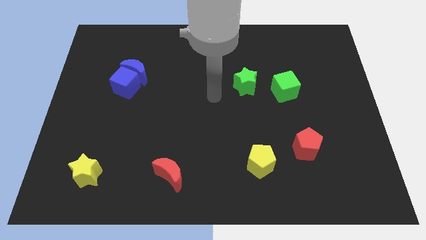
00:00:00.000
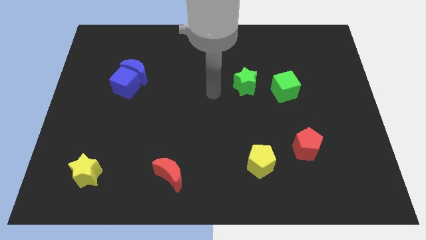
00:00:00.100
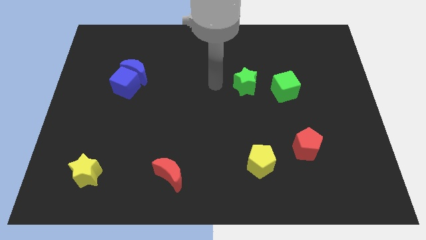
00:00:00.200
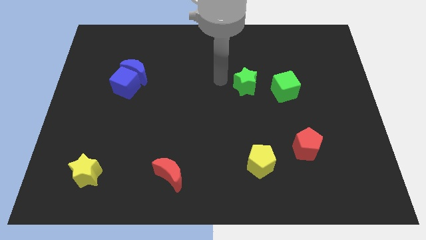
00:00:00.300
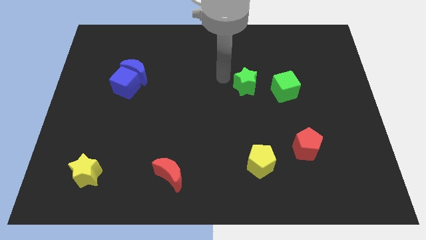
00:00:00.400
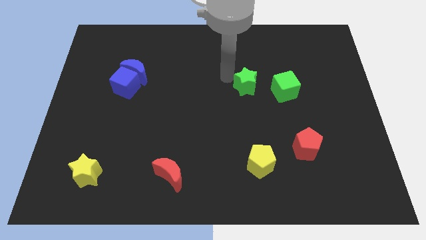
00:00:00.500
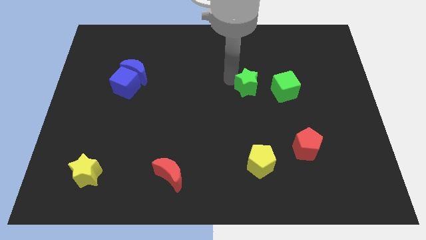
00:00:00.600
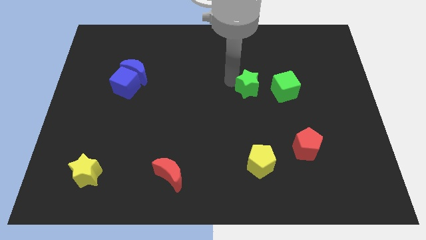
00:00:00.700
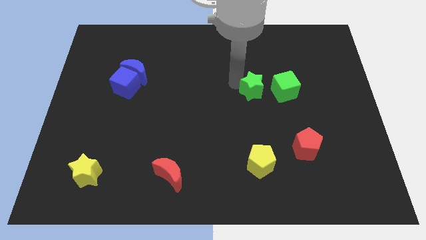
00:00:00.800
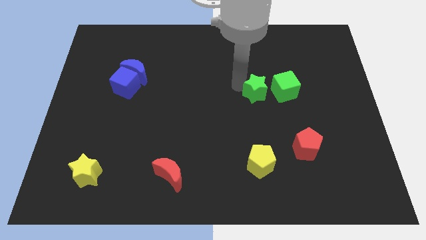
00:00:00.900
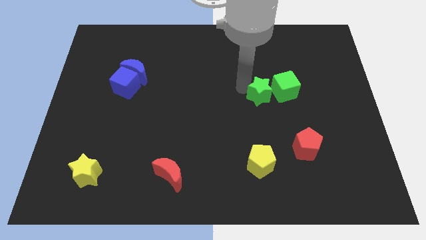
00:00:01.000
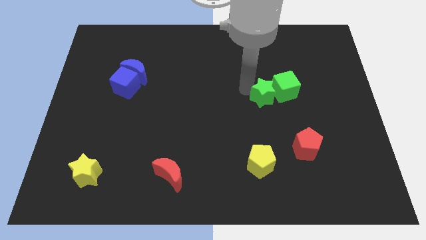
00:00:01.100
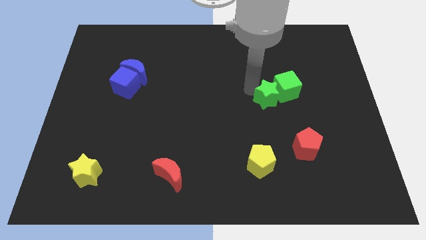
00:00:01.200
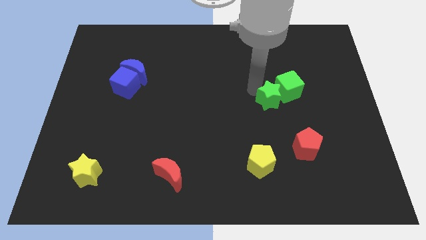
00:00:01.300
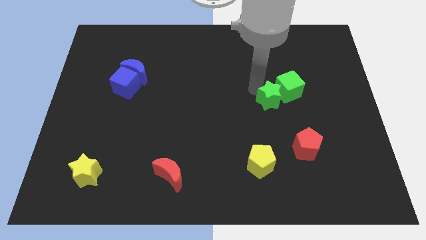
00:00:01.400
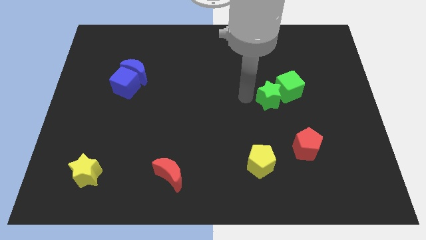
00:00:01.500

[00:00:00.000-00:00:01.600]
push the green star into the green cube

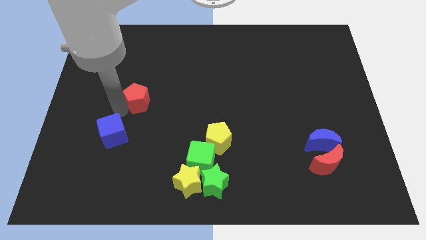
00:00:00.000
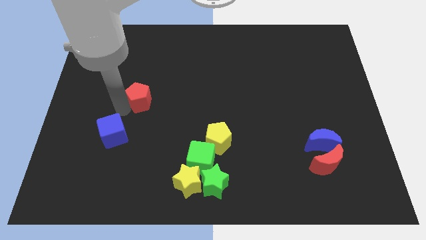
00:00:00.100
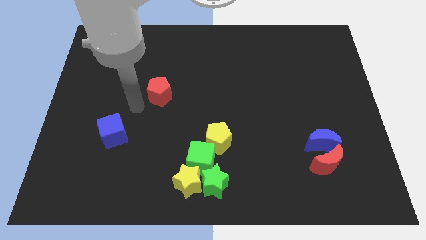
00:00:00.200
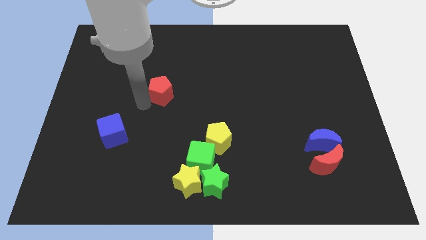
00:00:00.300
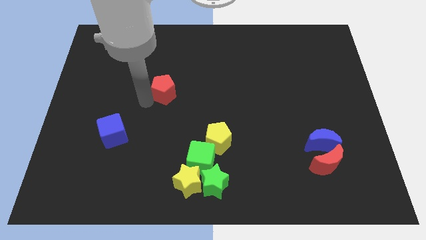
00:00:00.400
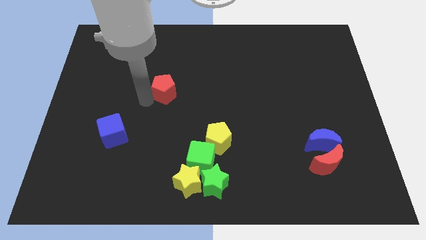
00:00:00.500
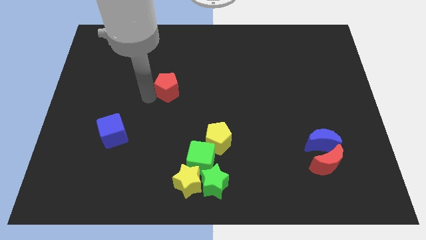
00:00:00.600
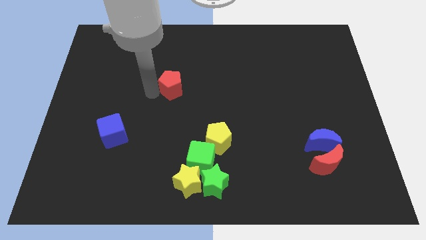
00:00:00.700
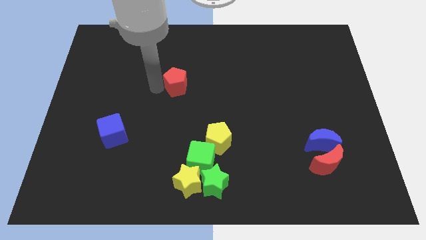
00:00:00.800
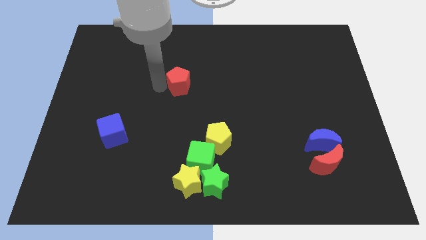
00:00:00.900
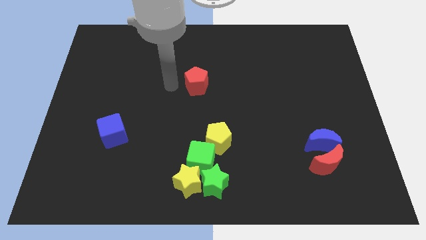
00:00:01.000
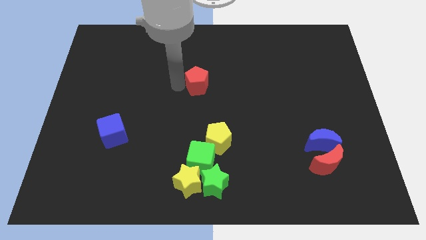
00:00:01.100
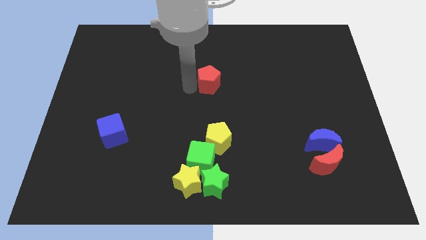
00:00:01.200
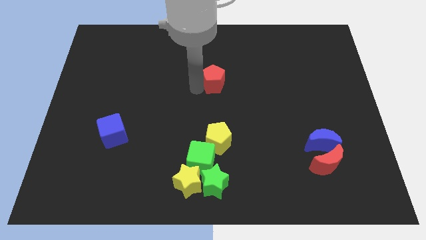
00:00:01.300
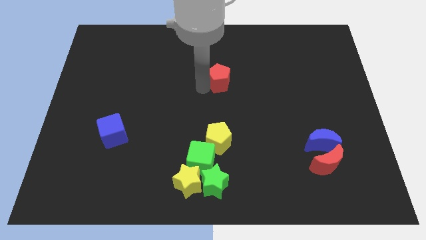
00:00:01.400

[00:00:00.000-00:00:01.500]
move the red pentagon to the top of the yellow pentagon

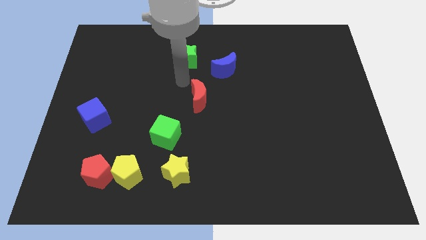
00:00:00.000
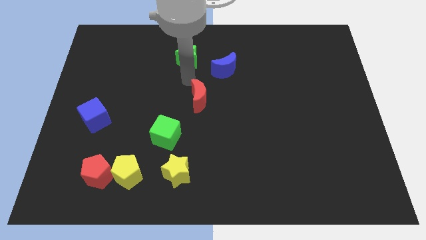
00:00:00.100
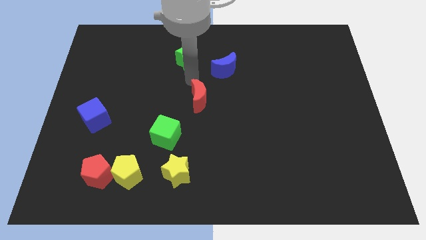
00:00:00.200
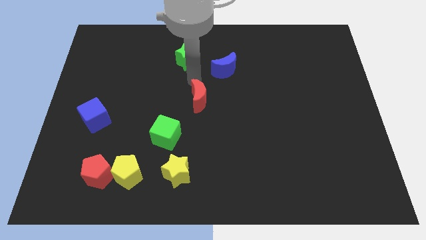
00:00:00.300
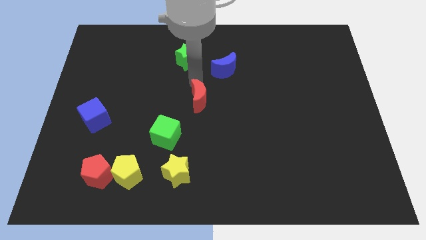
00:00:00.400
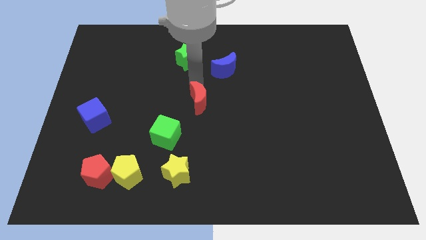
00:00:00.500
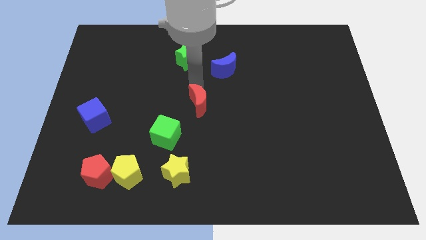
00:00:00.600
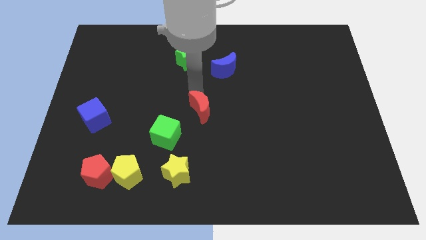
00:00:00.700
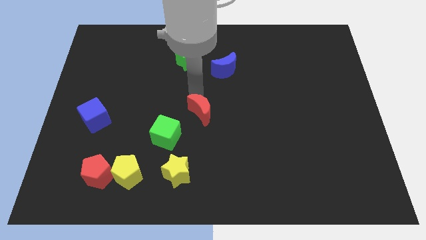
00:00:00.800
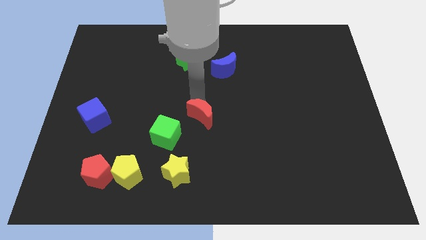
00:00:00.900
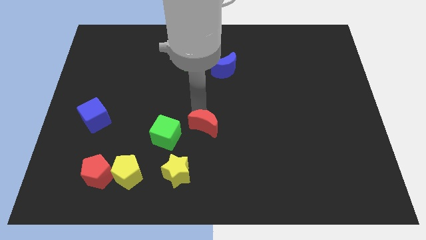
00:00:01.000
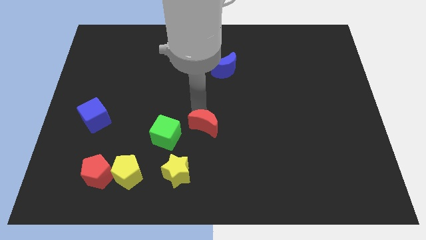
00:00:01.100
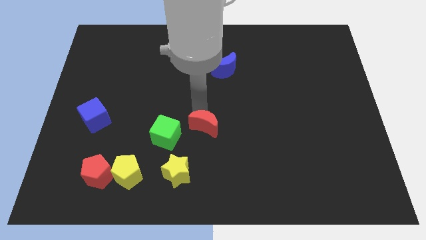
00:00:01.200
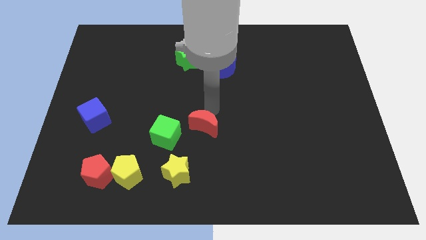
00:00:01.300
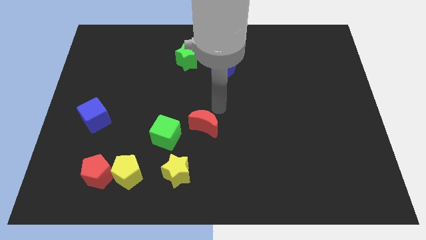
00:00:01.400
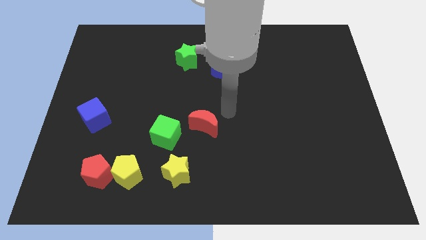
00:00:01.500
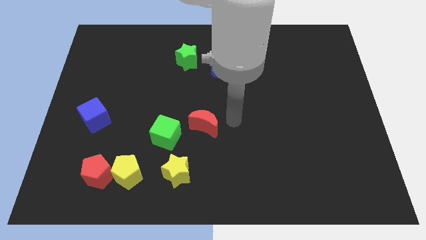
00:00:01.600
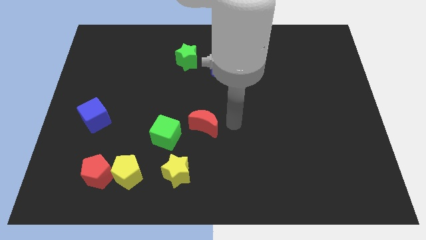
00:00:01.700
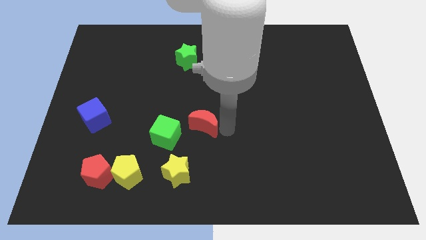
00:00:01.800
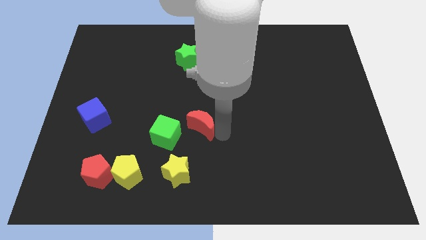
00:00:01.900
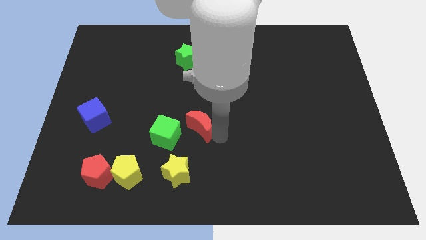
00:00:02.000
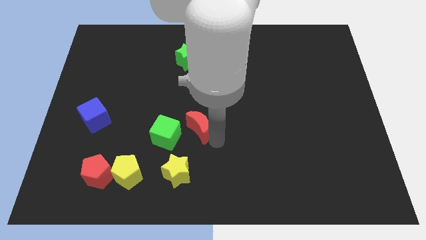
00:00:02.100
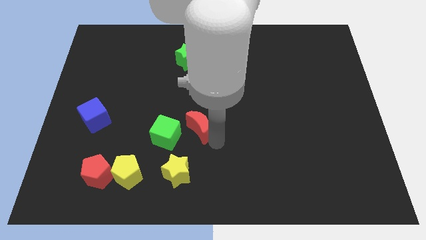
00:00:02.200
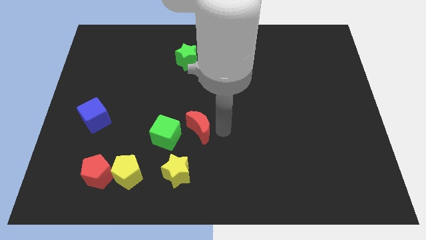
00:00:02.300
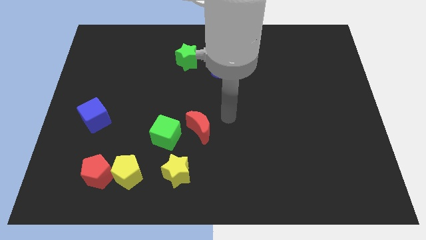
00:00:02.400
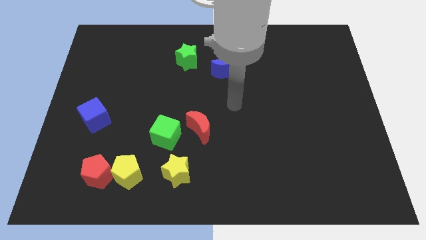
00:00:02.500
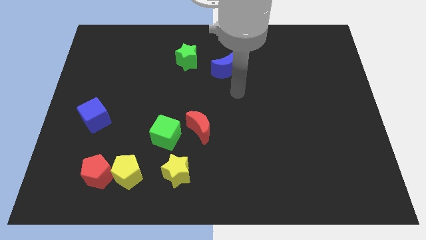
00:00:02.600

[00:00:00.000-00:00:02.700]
move the red crescent to the right of green cube

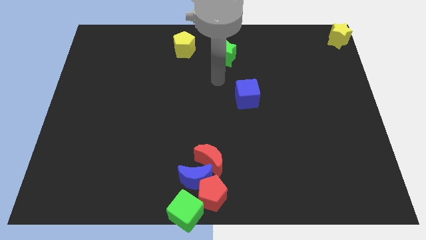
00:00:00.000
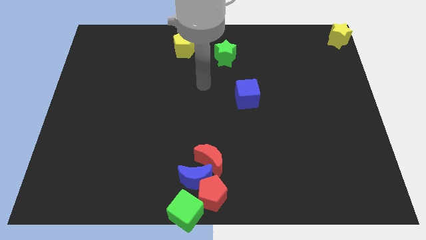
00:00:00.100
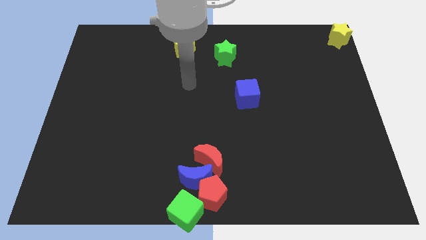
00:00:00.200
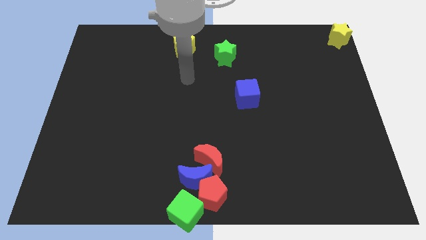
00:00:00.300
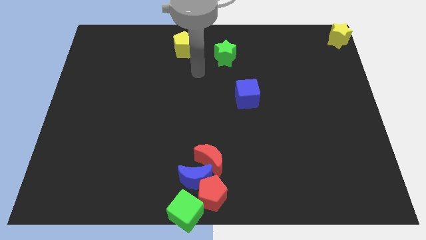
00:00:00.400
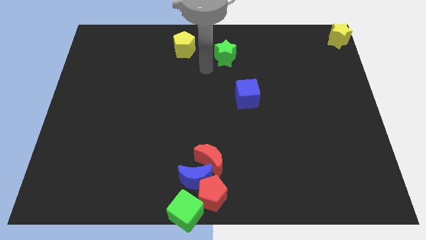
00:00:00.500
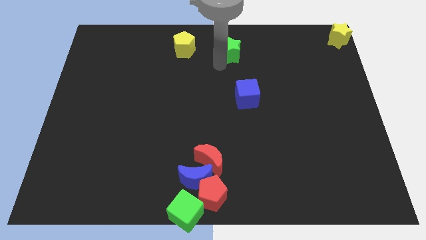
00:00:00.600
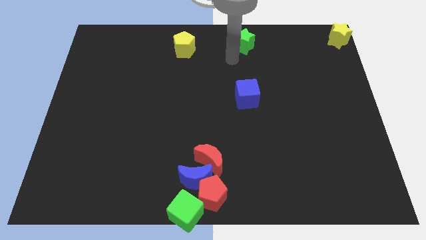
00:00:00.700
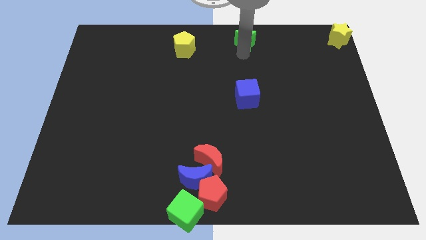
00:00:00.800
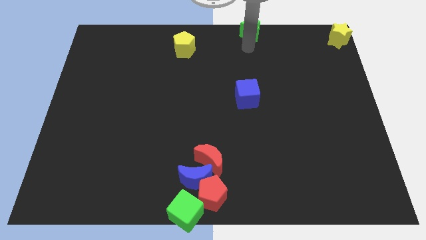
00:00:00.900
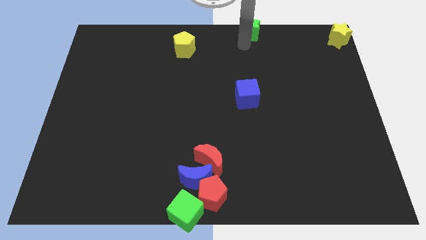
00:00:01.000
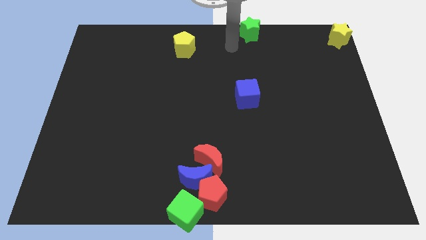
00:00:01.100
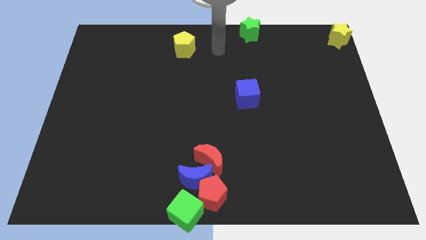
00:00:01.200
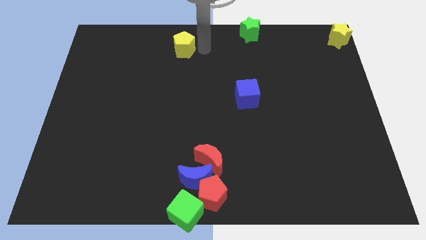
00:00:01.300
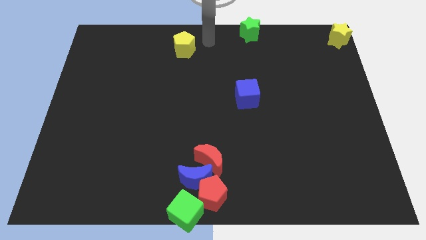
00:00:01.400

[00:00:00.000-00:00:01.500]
move the green star diagonal to the right of the yellow star

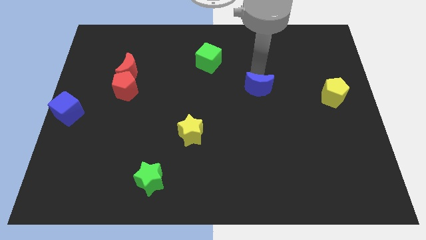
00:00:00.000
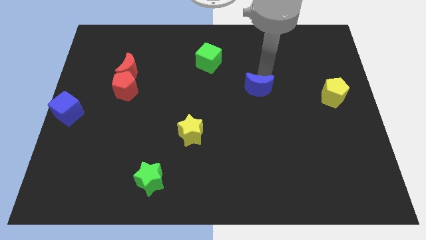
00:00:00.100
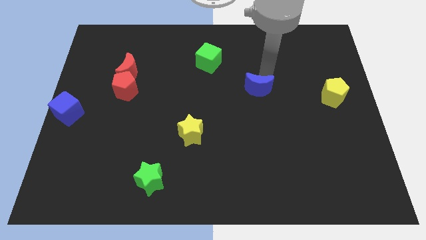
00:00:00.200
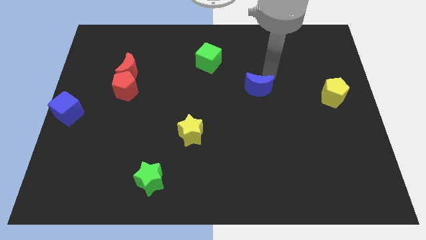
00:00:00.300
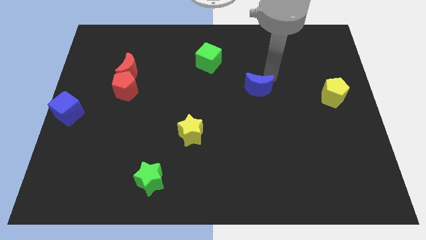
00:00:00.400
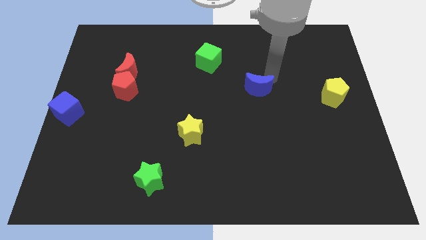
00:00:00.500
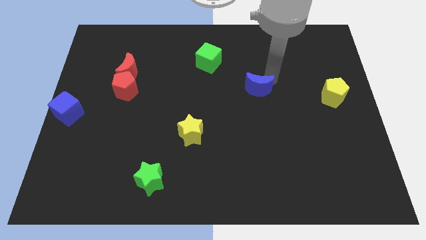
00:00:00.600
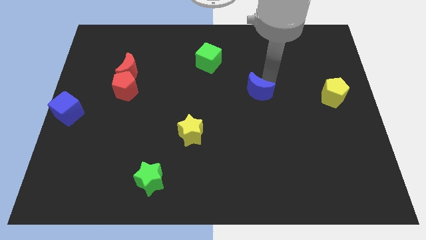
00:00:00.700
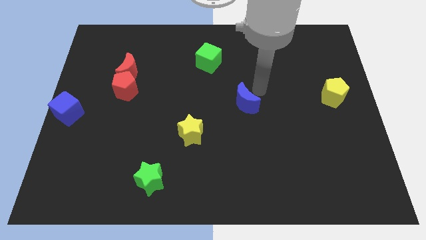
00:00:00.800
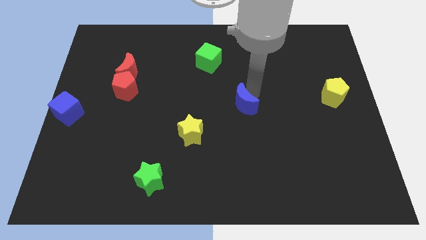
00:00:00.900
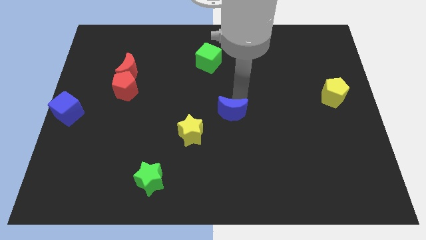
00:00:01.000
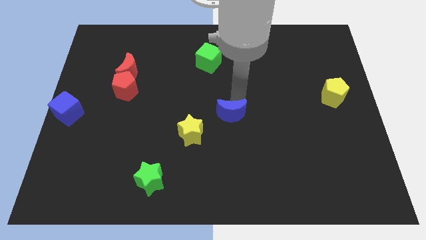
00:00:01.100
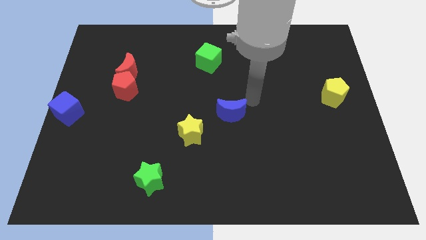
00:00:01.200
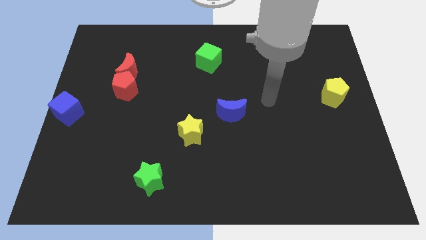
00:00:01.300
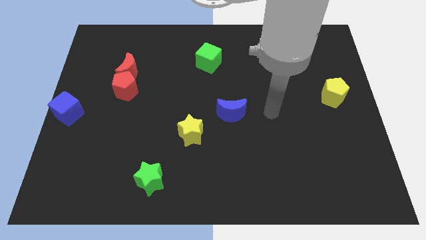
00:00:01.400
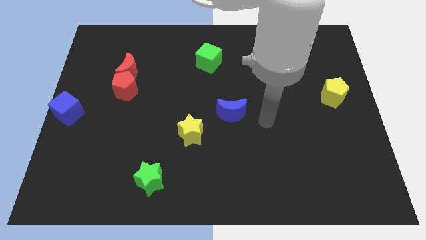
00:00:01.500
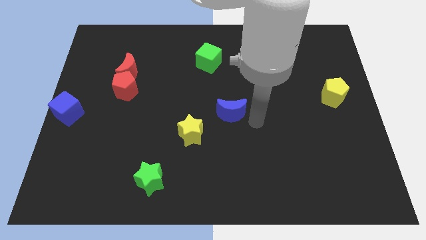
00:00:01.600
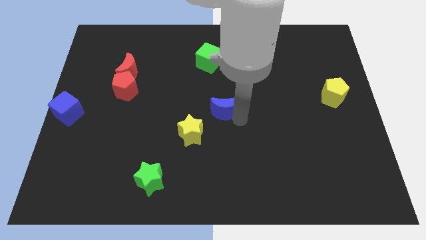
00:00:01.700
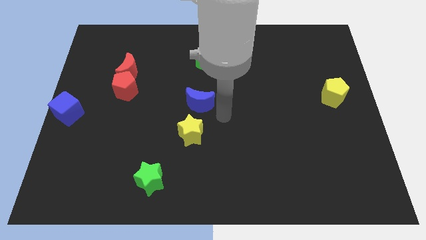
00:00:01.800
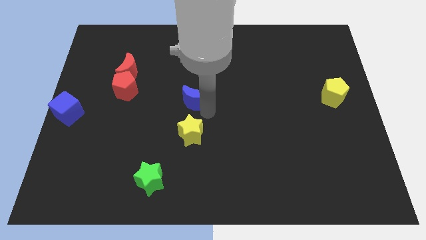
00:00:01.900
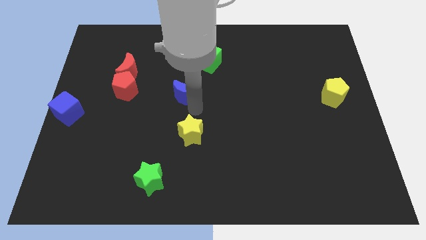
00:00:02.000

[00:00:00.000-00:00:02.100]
move the blue moon above the yellow star
